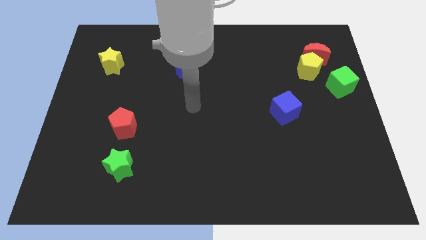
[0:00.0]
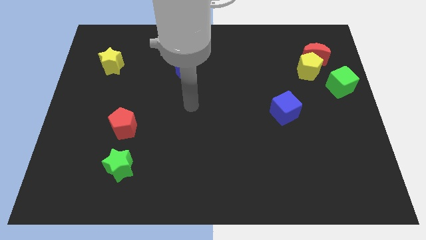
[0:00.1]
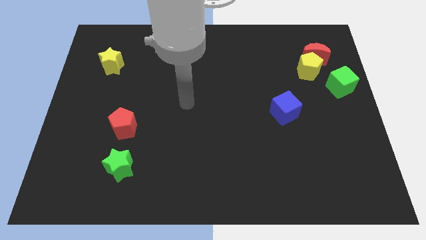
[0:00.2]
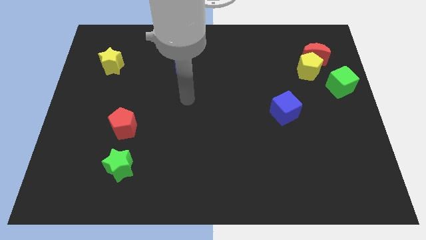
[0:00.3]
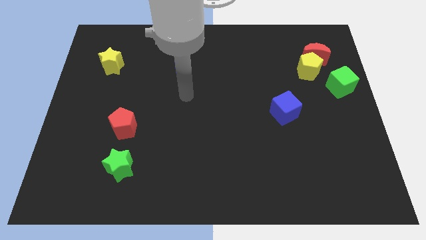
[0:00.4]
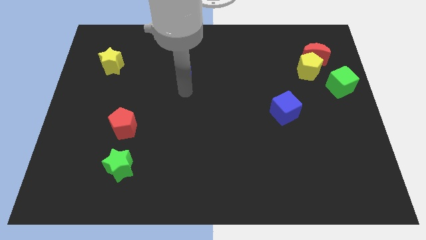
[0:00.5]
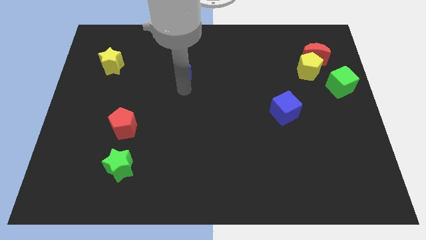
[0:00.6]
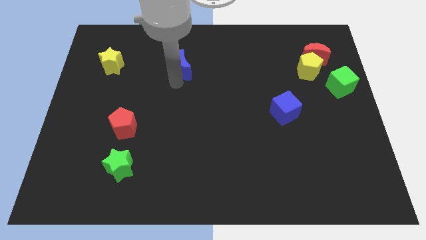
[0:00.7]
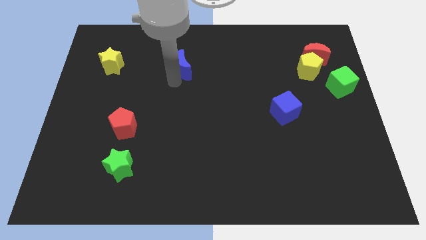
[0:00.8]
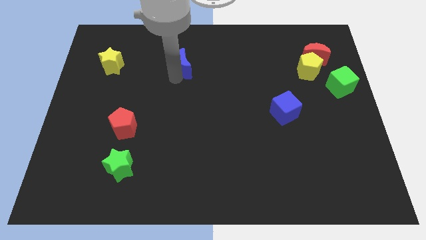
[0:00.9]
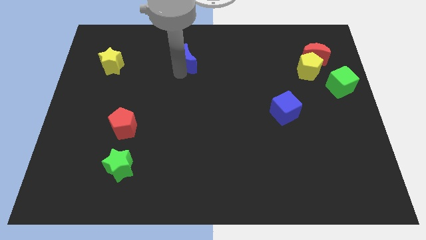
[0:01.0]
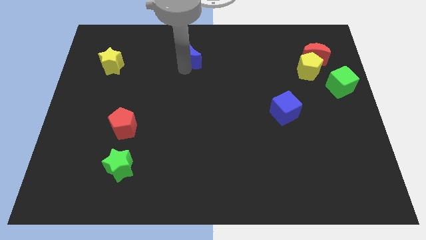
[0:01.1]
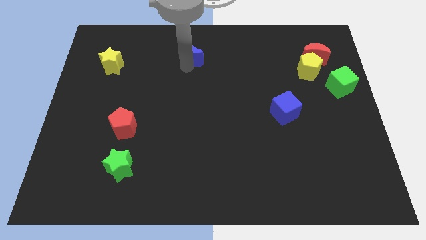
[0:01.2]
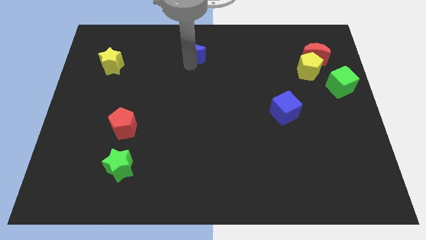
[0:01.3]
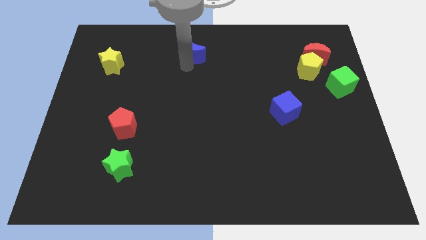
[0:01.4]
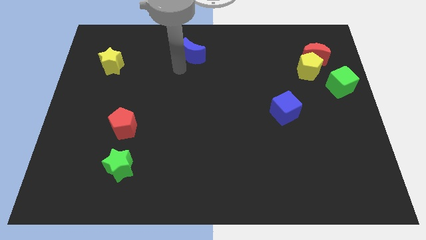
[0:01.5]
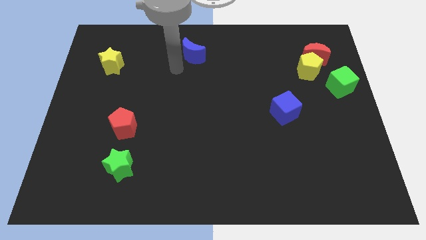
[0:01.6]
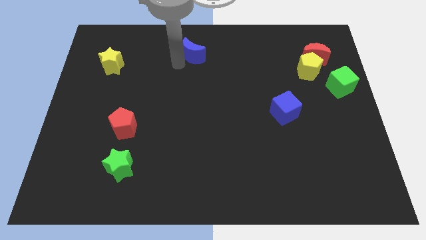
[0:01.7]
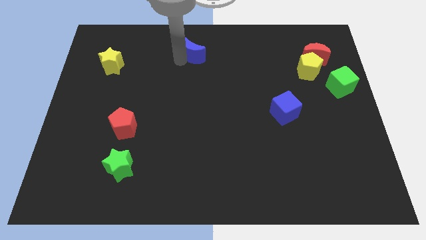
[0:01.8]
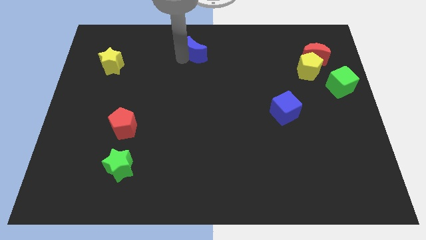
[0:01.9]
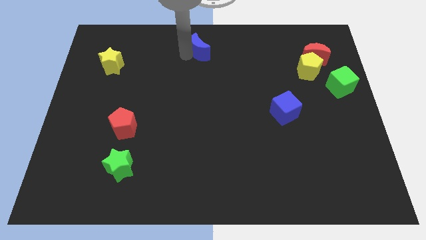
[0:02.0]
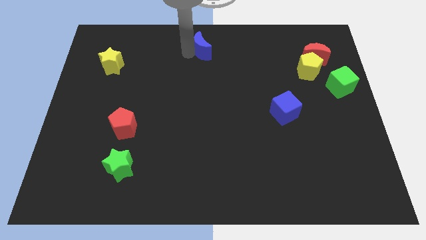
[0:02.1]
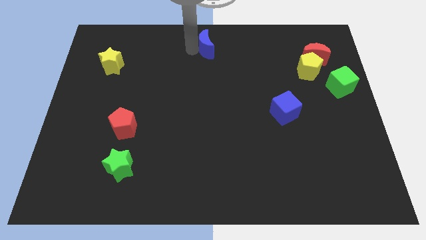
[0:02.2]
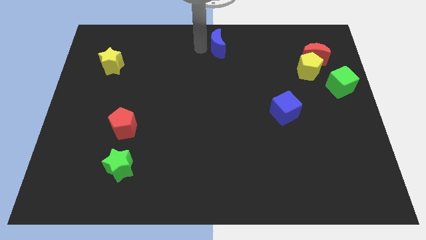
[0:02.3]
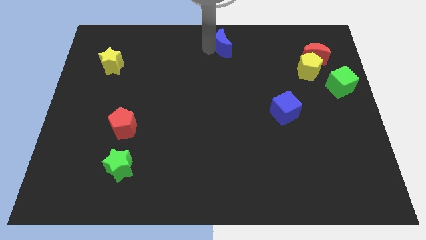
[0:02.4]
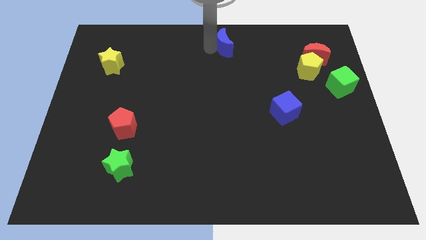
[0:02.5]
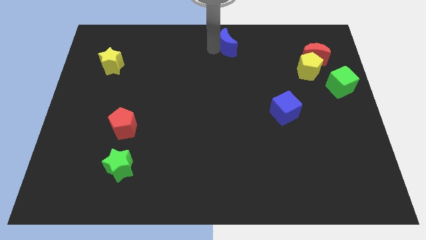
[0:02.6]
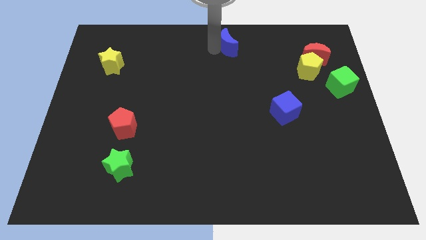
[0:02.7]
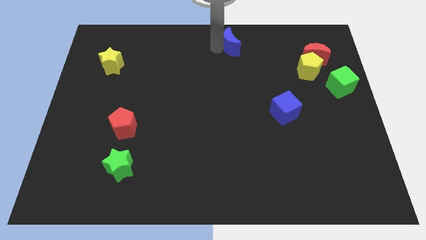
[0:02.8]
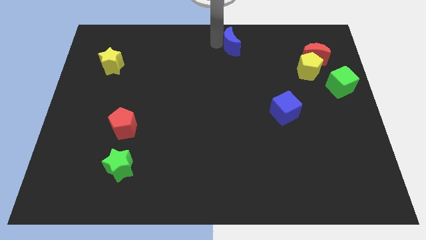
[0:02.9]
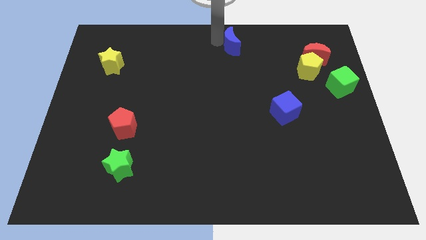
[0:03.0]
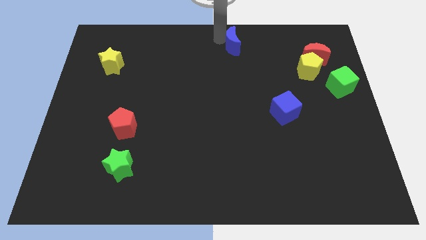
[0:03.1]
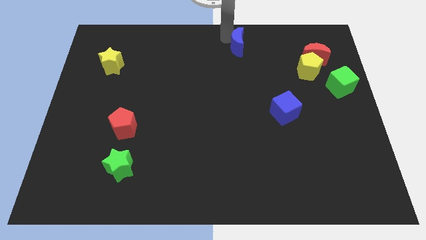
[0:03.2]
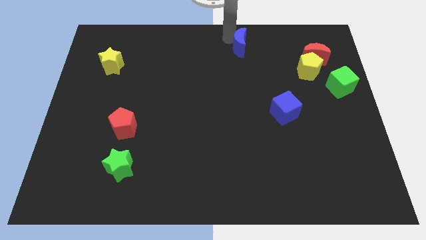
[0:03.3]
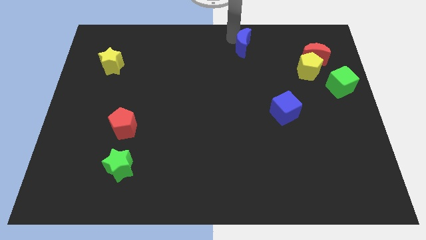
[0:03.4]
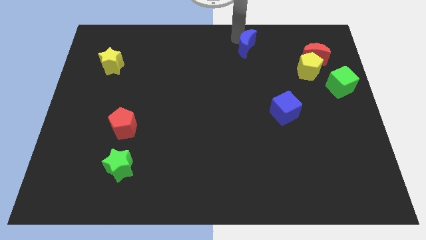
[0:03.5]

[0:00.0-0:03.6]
push the blue moon to the top center

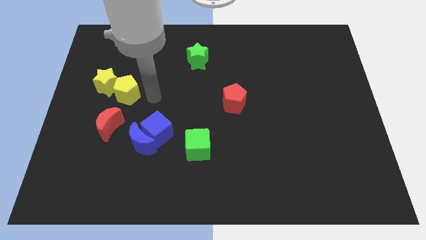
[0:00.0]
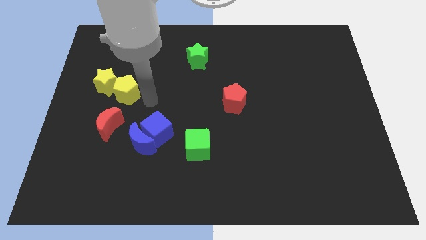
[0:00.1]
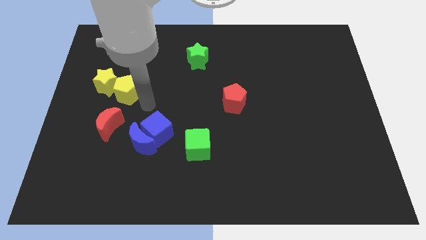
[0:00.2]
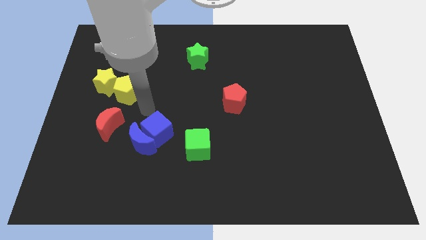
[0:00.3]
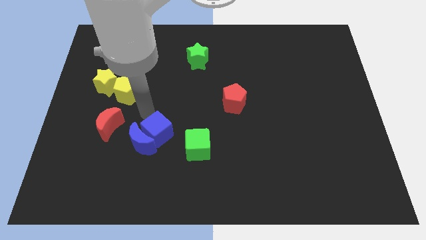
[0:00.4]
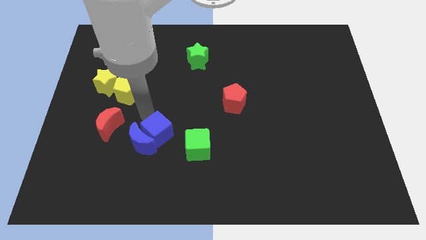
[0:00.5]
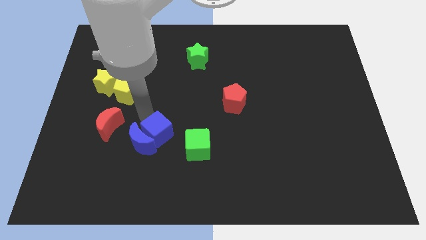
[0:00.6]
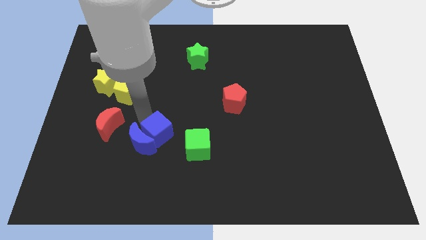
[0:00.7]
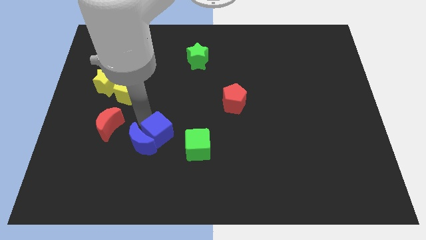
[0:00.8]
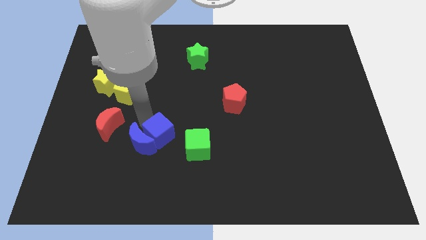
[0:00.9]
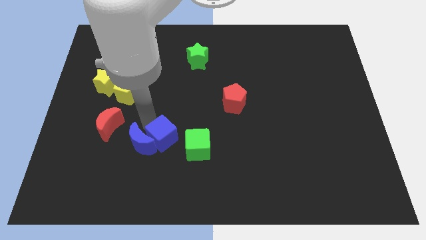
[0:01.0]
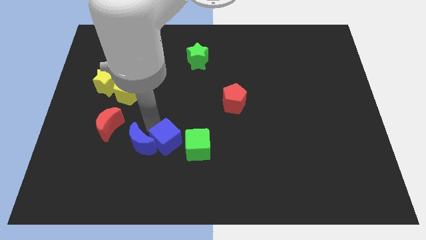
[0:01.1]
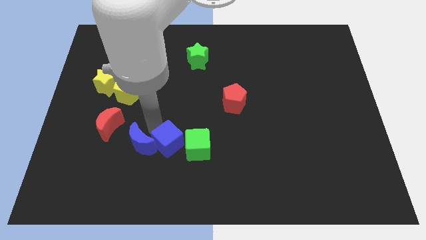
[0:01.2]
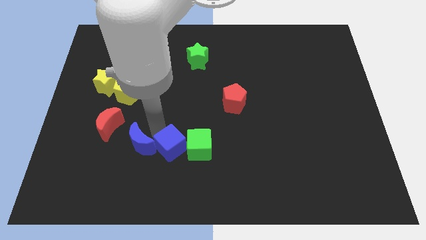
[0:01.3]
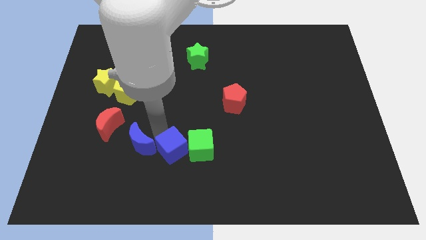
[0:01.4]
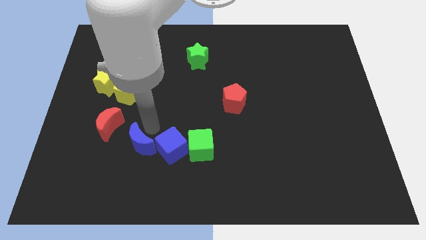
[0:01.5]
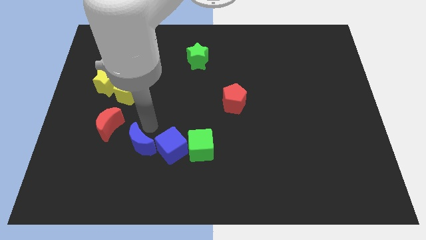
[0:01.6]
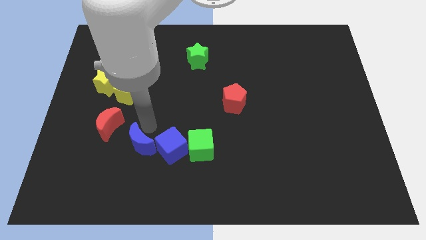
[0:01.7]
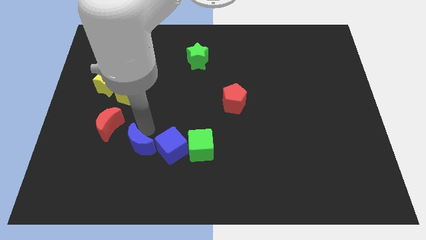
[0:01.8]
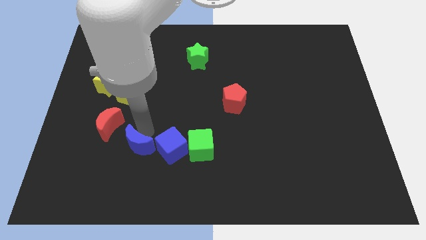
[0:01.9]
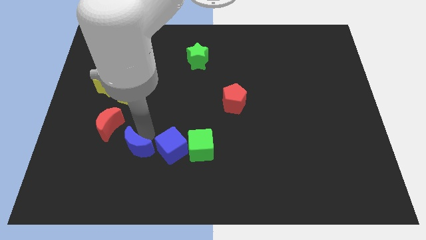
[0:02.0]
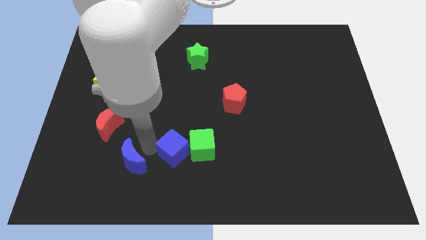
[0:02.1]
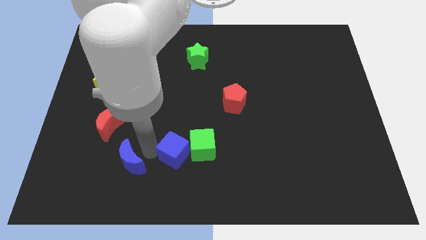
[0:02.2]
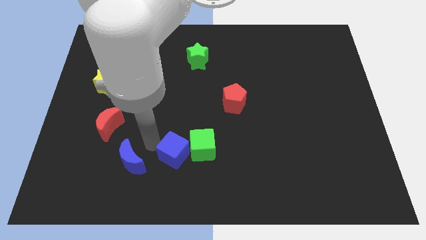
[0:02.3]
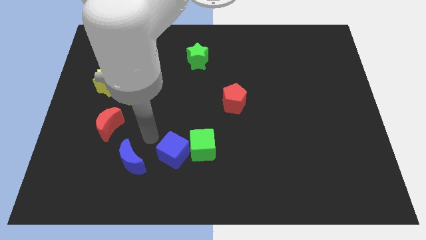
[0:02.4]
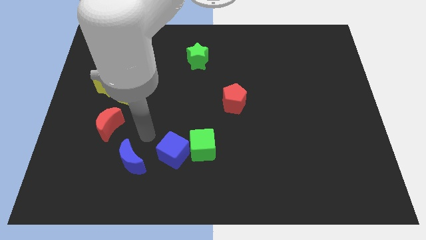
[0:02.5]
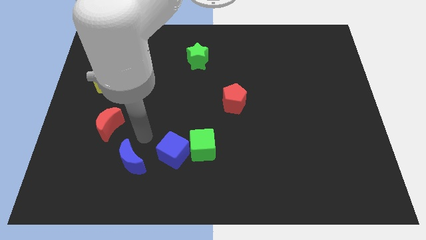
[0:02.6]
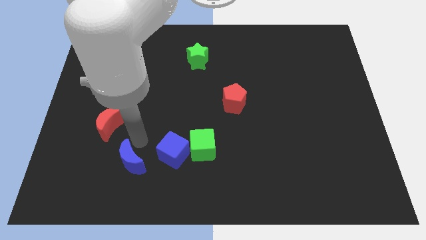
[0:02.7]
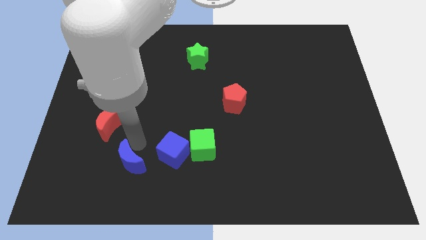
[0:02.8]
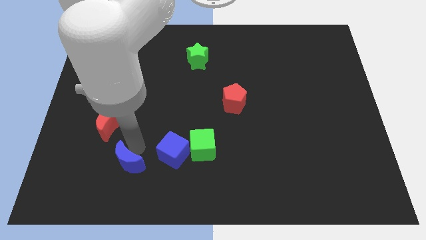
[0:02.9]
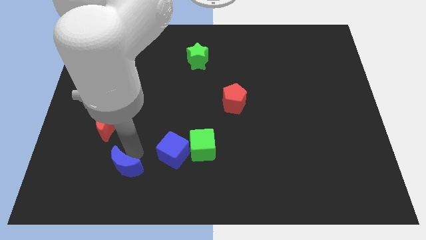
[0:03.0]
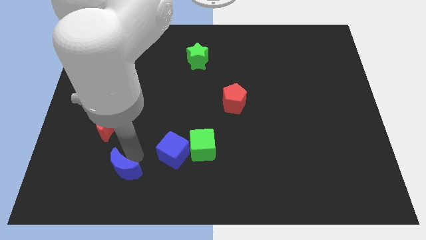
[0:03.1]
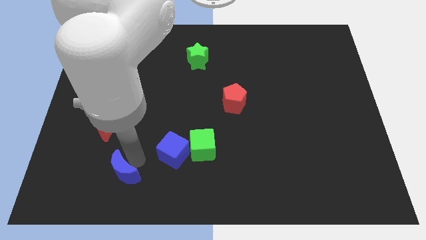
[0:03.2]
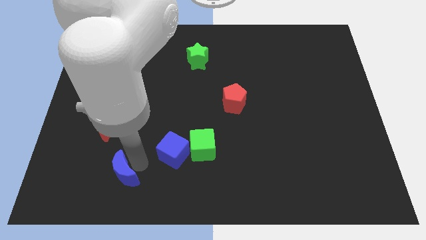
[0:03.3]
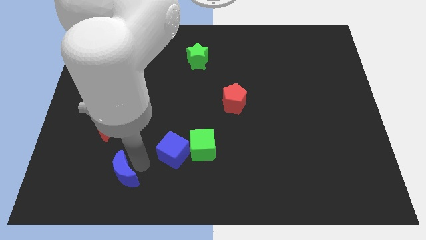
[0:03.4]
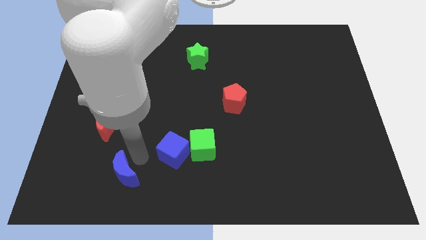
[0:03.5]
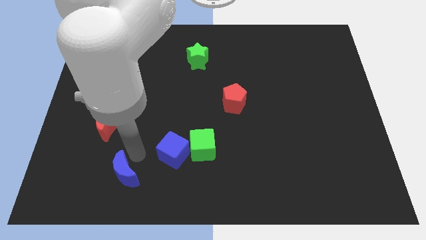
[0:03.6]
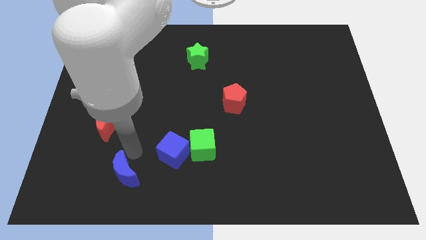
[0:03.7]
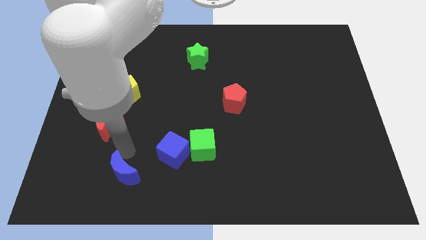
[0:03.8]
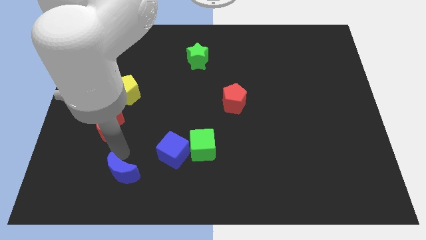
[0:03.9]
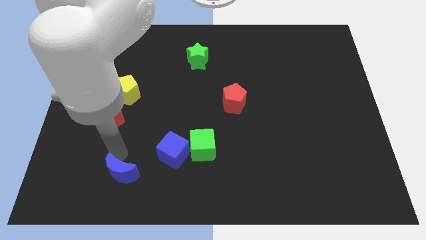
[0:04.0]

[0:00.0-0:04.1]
place the blue cube close to the green cube

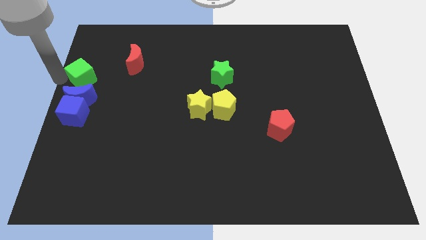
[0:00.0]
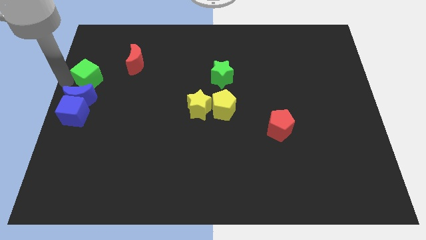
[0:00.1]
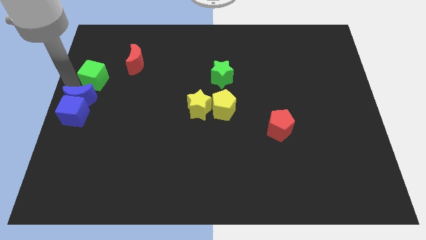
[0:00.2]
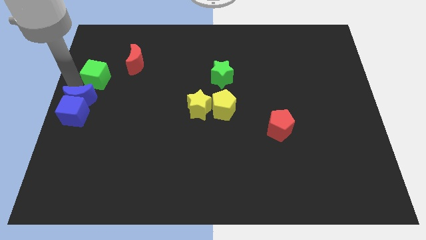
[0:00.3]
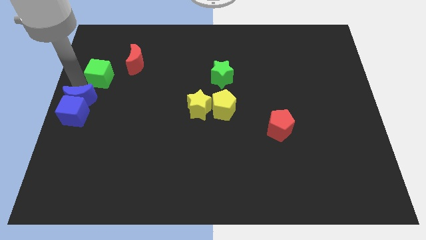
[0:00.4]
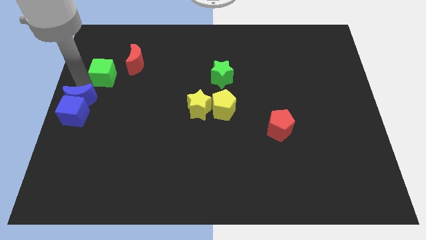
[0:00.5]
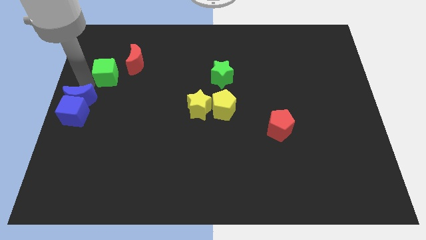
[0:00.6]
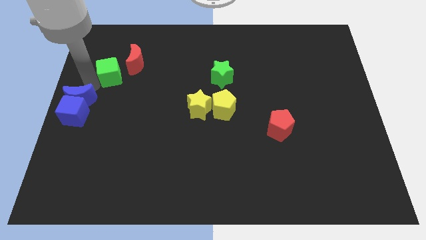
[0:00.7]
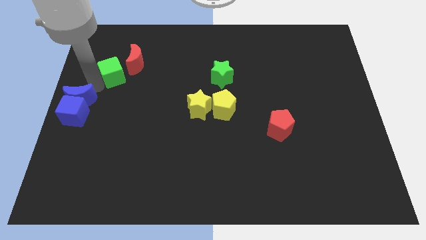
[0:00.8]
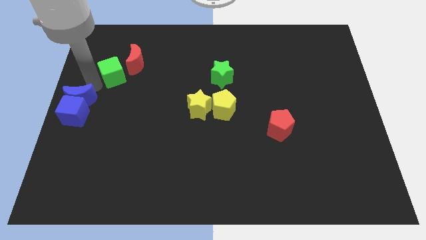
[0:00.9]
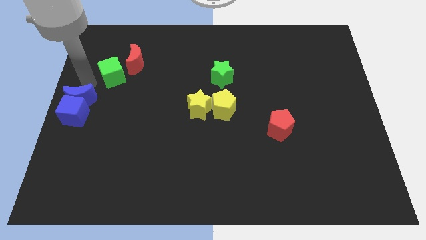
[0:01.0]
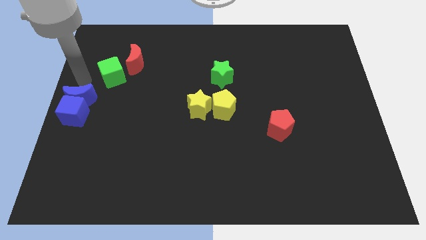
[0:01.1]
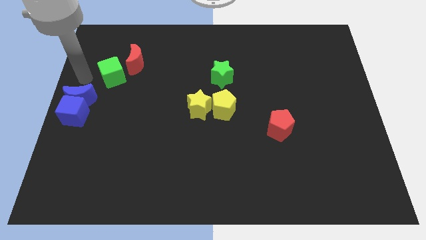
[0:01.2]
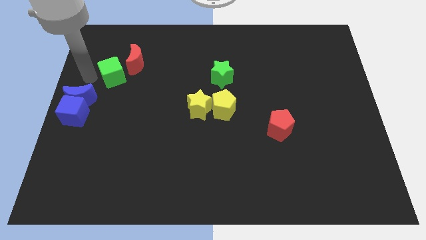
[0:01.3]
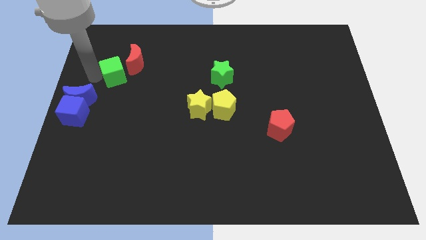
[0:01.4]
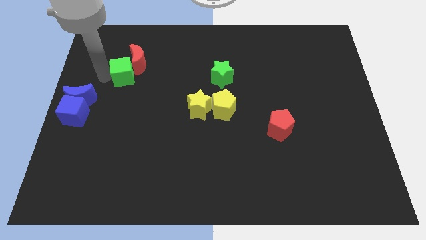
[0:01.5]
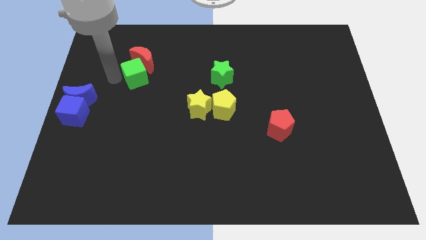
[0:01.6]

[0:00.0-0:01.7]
push the green cube into the red moon
